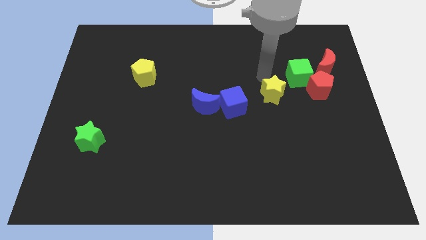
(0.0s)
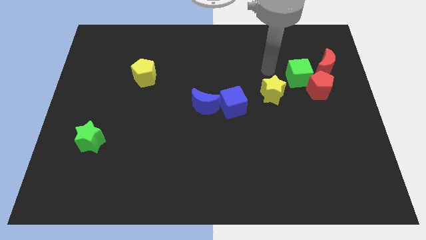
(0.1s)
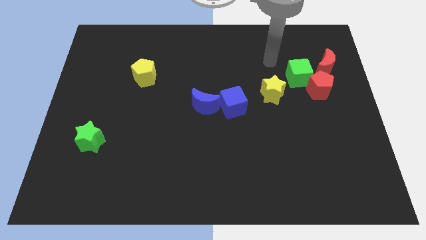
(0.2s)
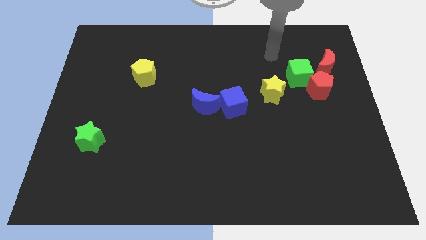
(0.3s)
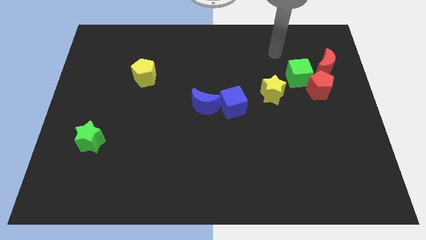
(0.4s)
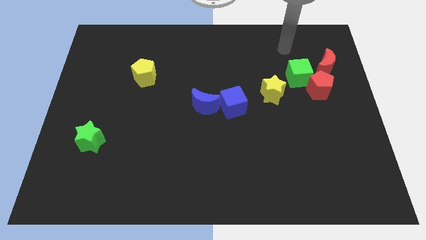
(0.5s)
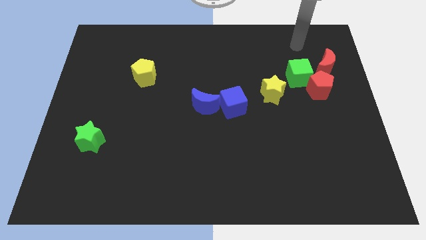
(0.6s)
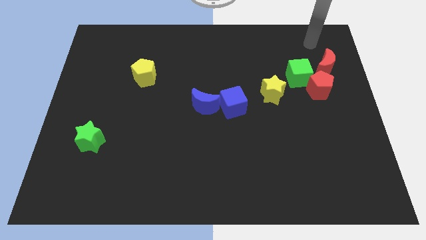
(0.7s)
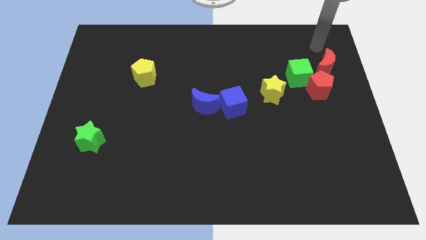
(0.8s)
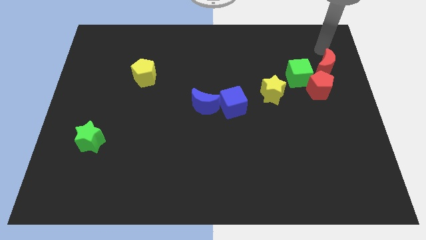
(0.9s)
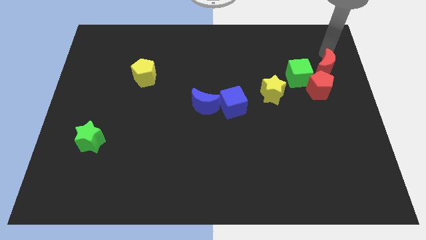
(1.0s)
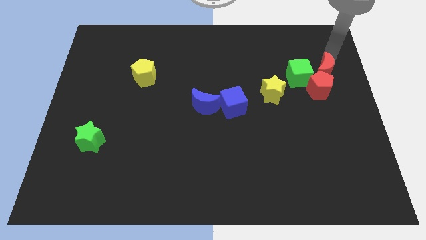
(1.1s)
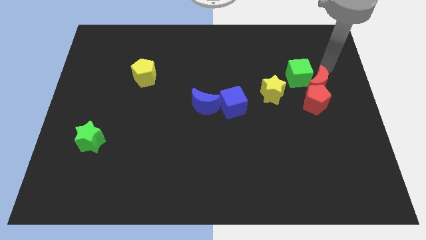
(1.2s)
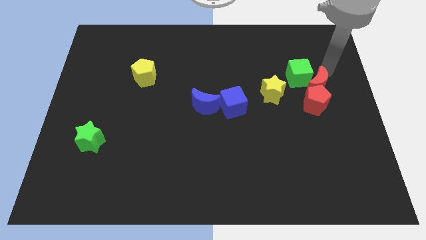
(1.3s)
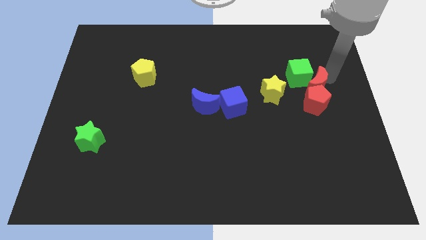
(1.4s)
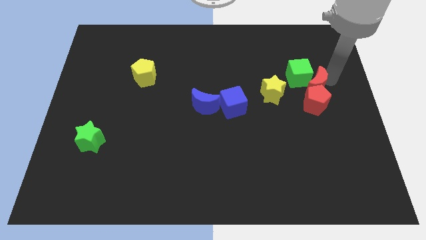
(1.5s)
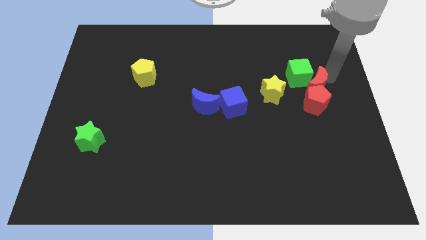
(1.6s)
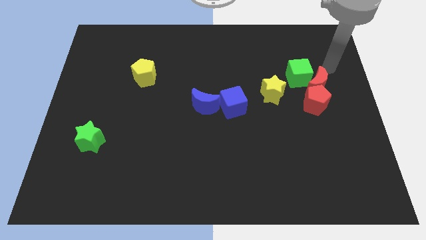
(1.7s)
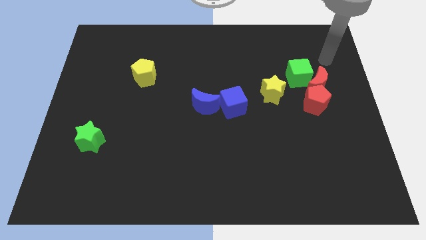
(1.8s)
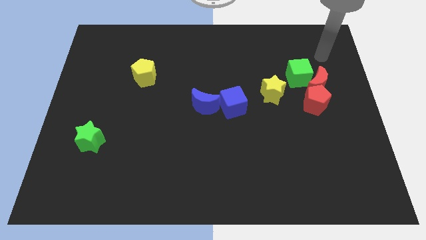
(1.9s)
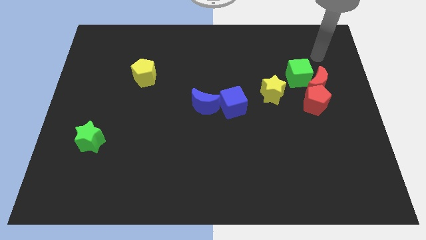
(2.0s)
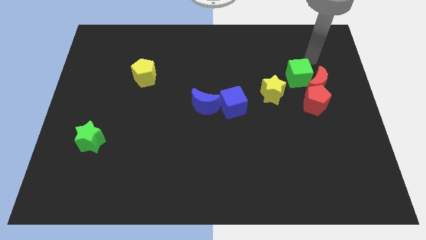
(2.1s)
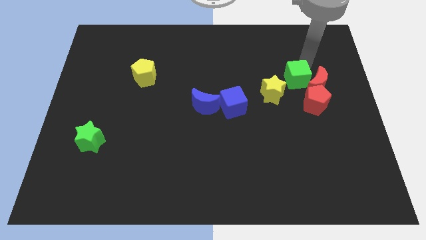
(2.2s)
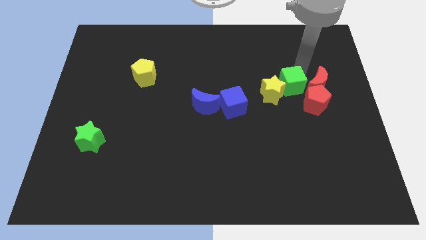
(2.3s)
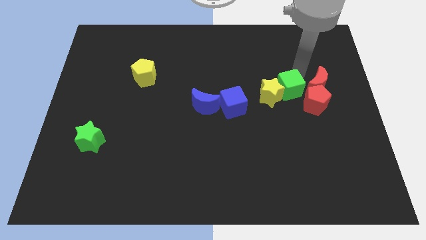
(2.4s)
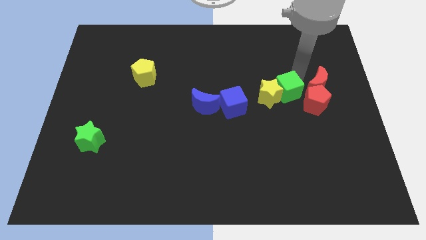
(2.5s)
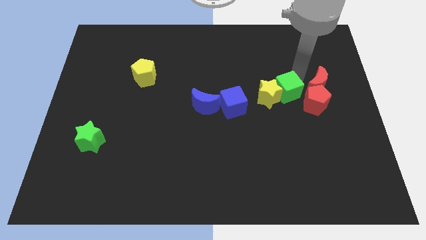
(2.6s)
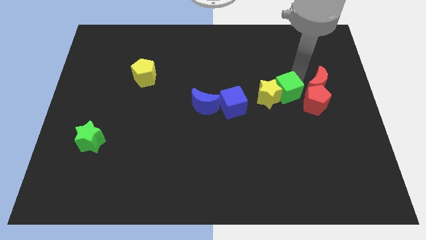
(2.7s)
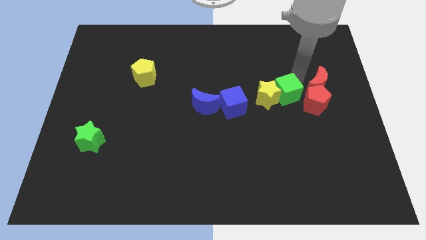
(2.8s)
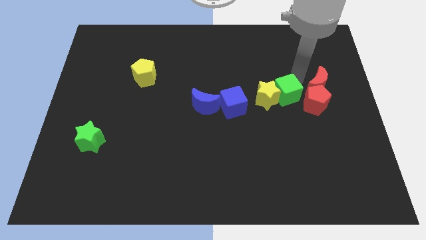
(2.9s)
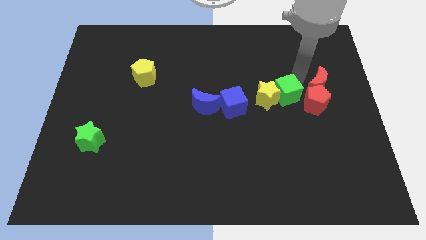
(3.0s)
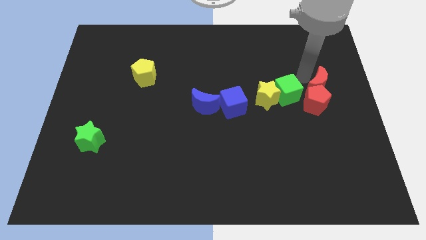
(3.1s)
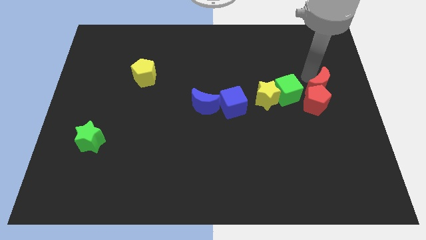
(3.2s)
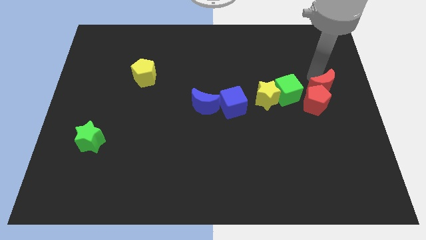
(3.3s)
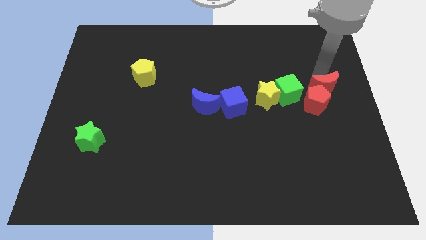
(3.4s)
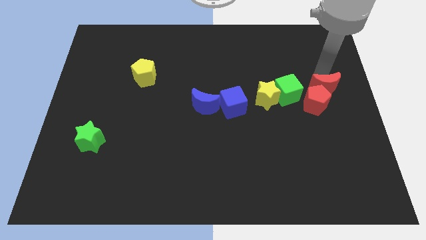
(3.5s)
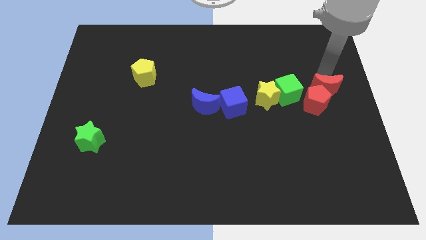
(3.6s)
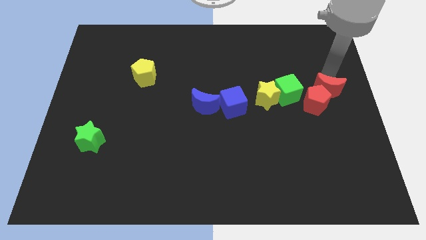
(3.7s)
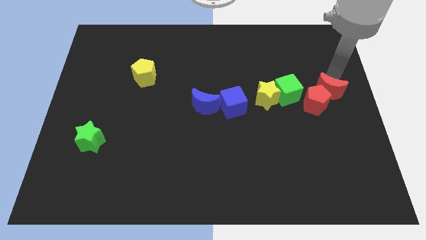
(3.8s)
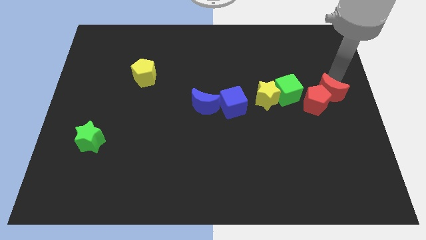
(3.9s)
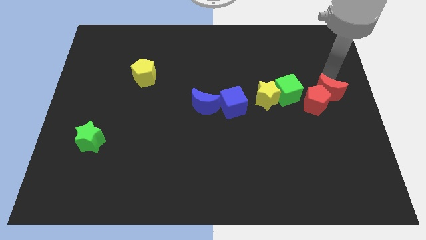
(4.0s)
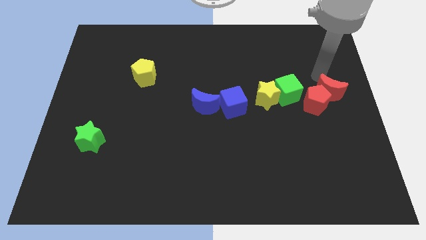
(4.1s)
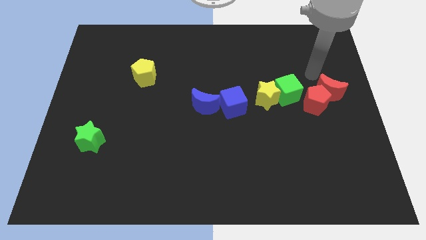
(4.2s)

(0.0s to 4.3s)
push the green cube to the right of the yellow star

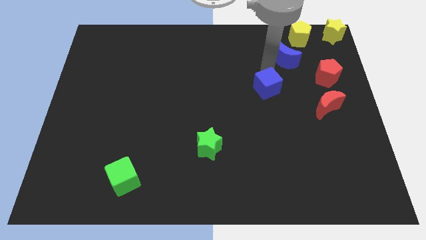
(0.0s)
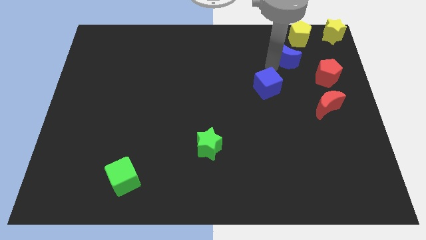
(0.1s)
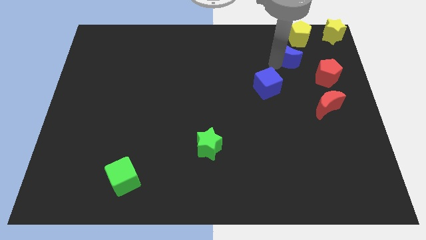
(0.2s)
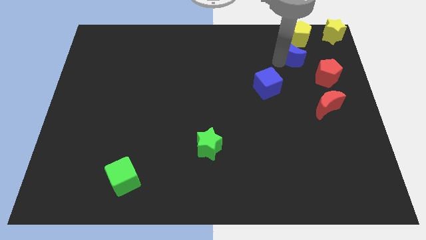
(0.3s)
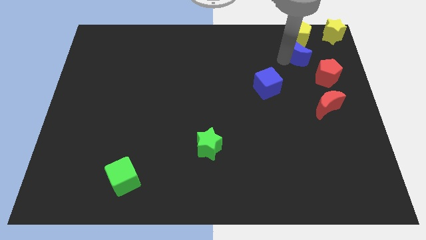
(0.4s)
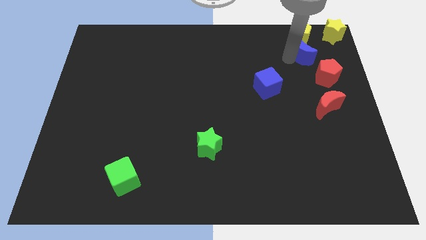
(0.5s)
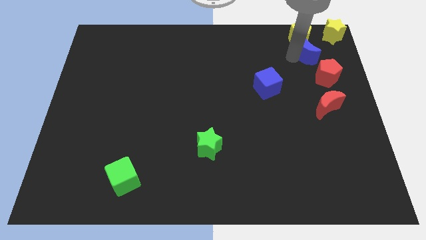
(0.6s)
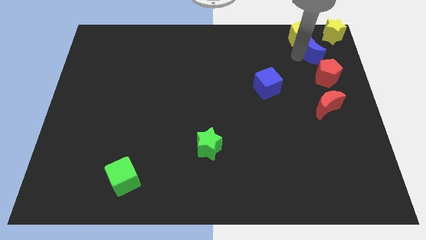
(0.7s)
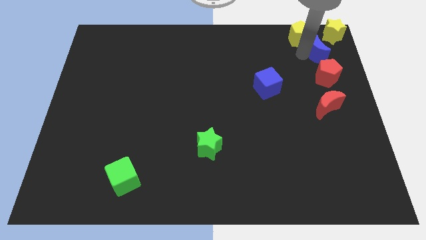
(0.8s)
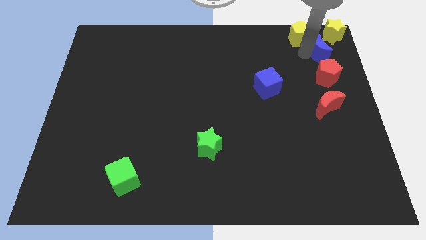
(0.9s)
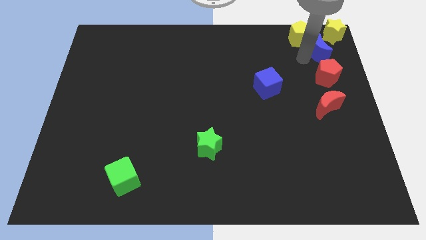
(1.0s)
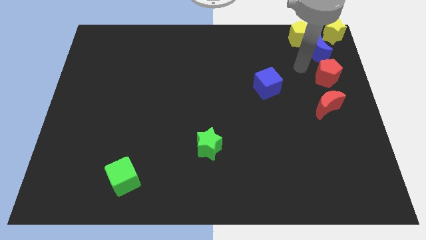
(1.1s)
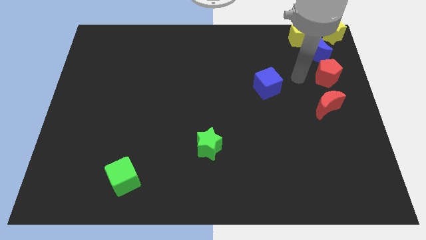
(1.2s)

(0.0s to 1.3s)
push the blue crescent above the red pentagon

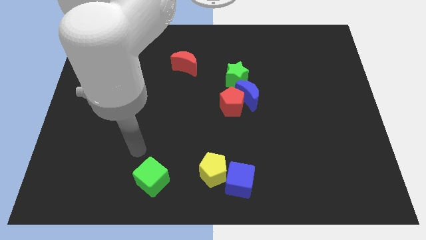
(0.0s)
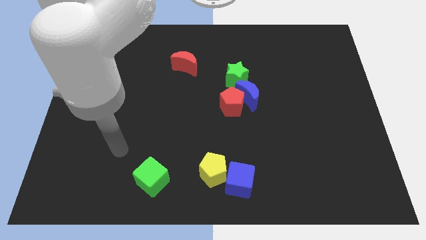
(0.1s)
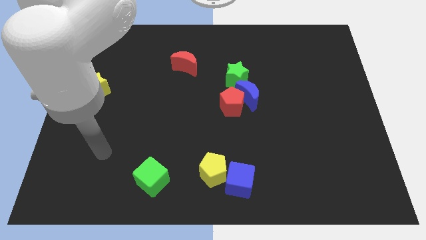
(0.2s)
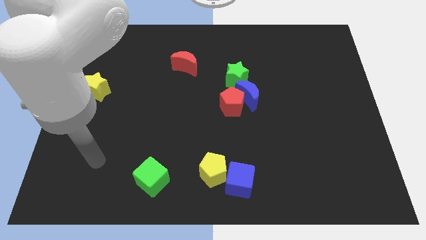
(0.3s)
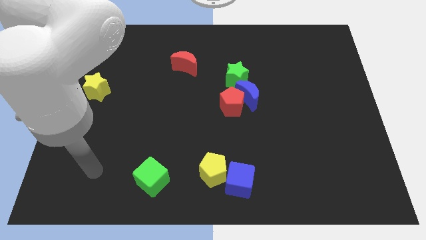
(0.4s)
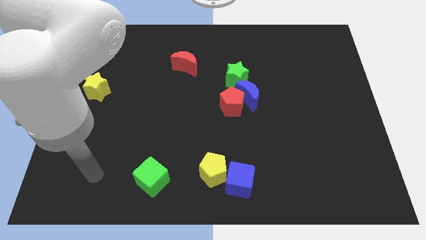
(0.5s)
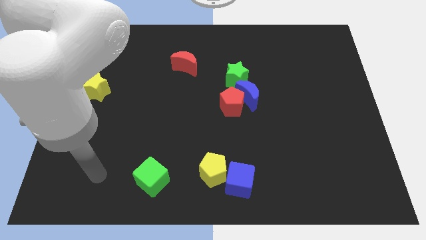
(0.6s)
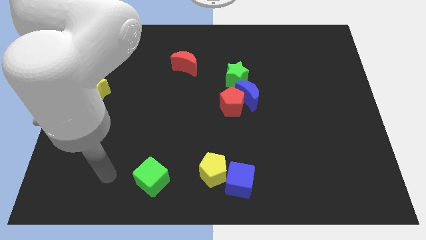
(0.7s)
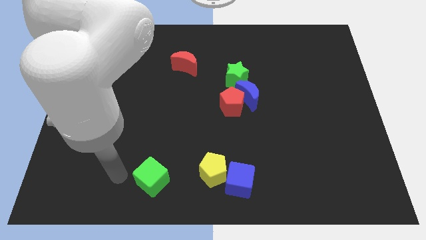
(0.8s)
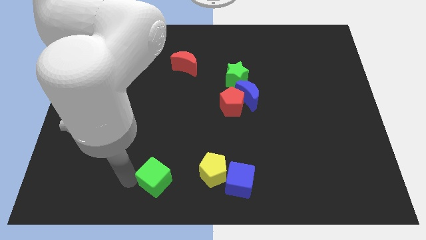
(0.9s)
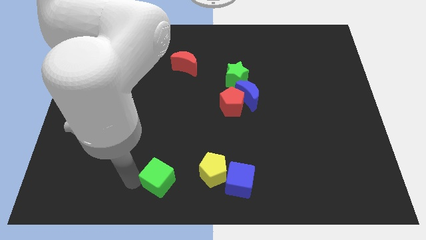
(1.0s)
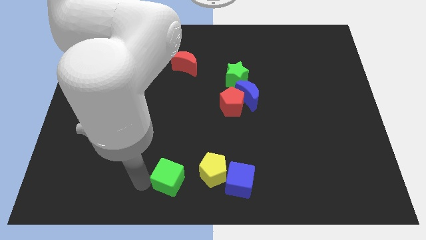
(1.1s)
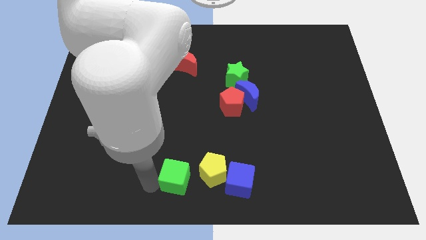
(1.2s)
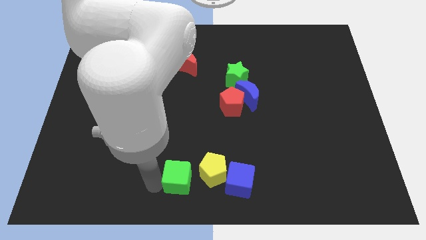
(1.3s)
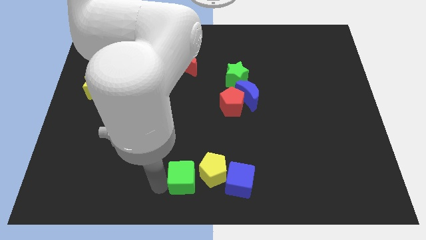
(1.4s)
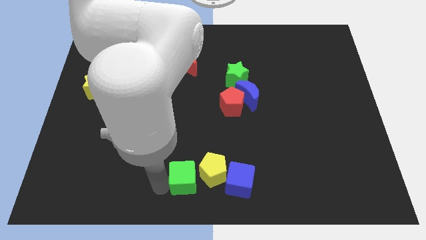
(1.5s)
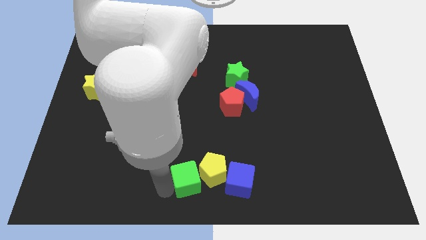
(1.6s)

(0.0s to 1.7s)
push the green cube towards the yellow pentagon

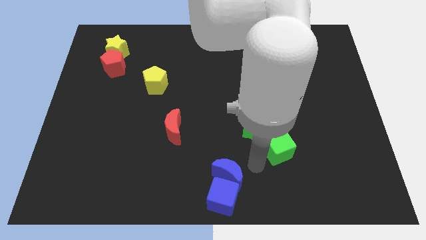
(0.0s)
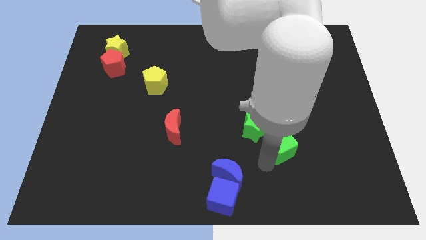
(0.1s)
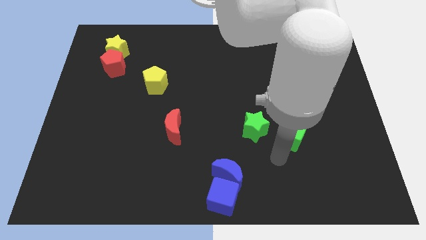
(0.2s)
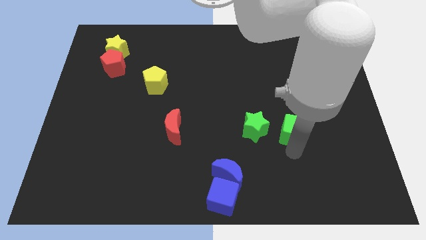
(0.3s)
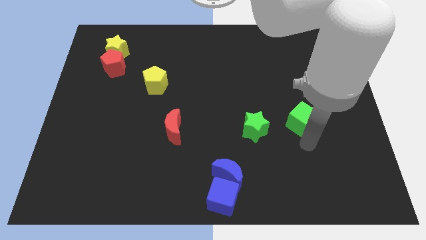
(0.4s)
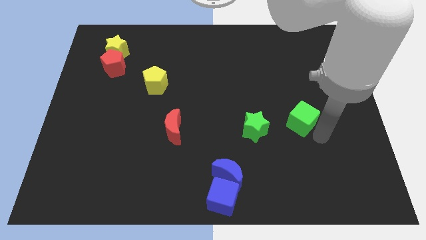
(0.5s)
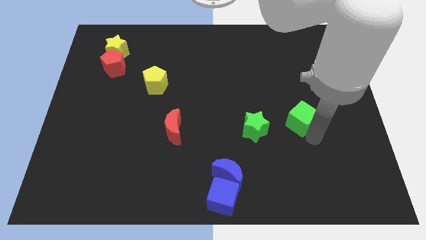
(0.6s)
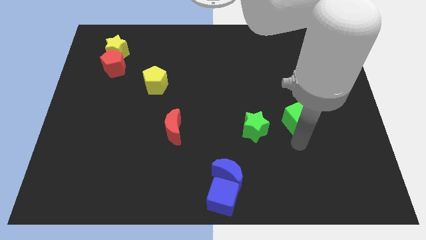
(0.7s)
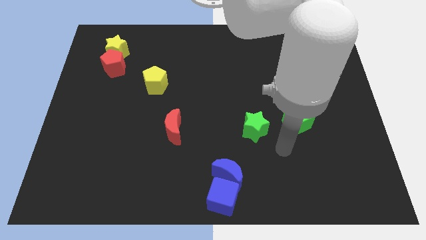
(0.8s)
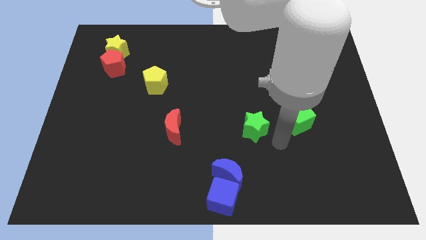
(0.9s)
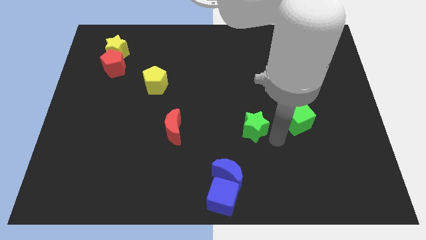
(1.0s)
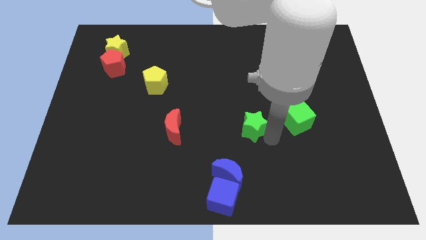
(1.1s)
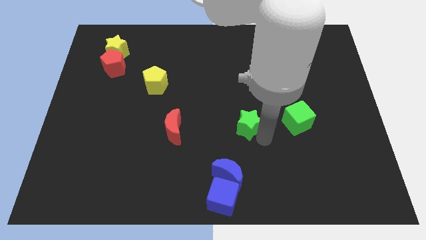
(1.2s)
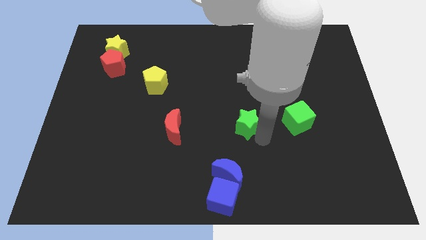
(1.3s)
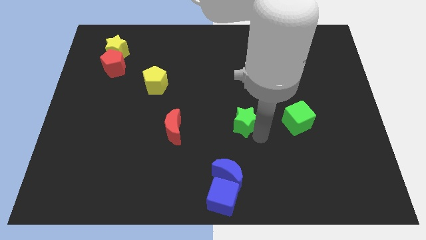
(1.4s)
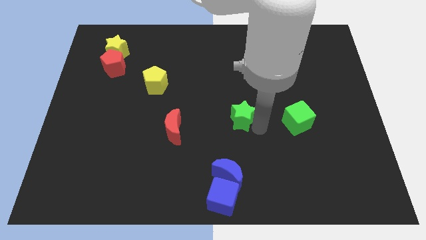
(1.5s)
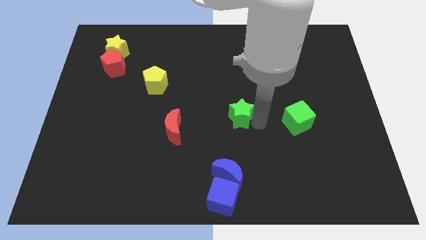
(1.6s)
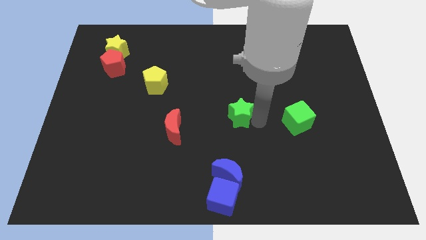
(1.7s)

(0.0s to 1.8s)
separate the green cube and green star
